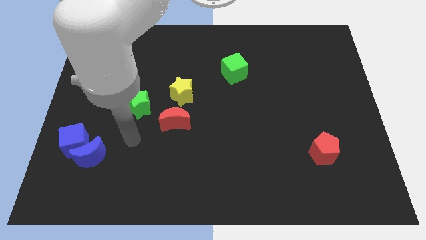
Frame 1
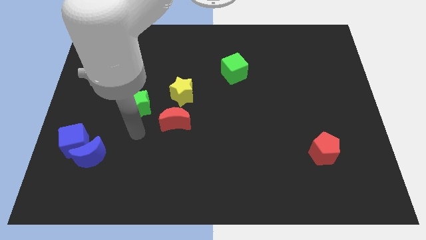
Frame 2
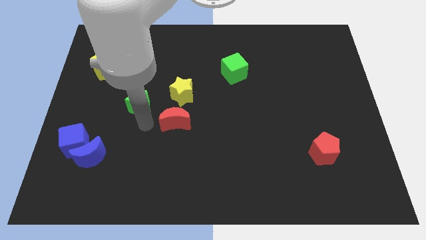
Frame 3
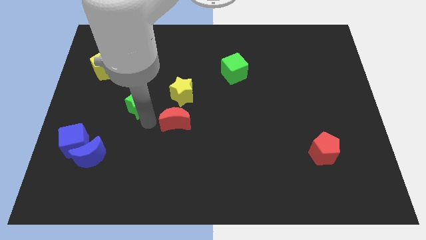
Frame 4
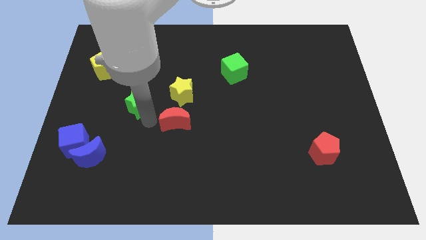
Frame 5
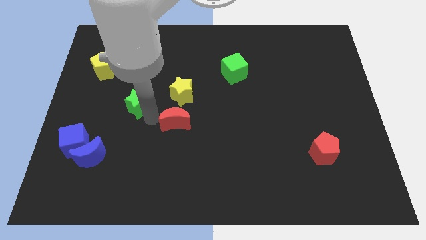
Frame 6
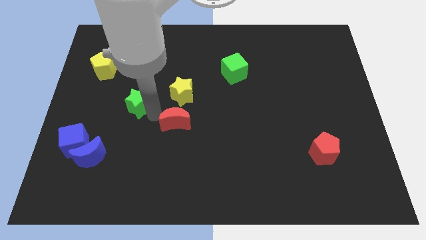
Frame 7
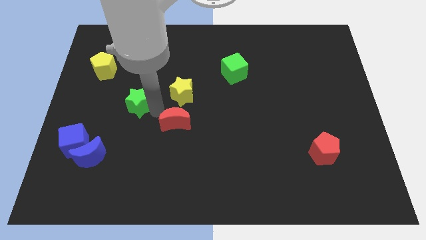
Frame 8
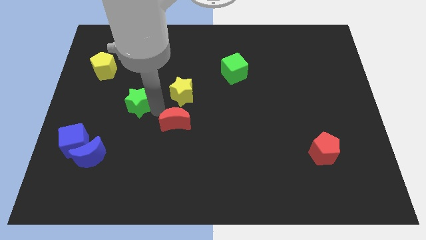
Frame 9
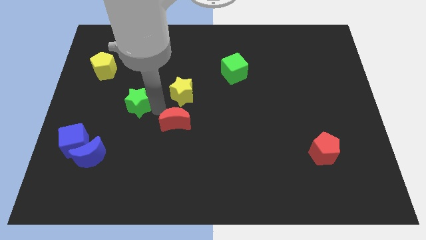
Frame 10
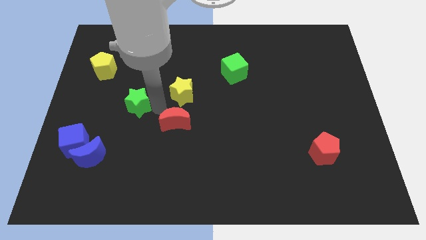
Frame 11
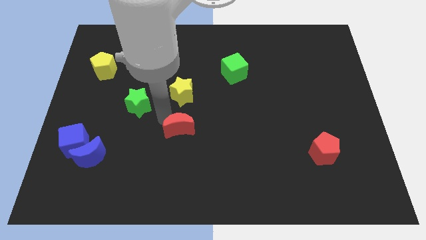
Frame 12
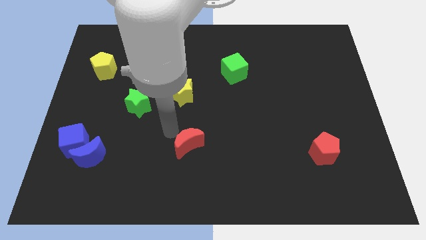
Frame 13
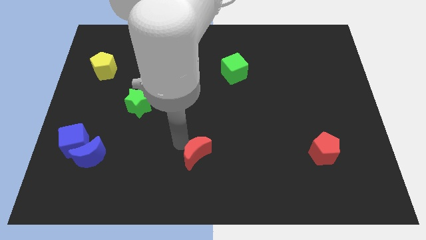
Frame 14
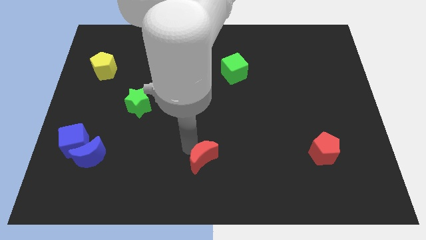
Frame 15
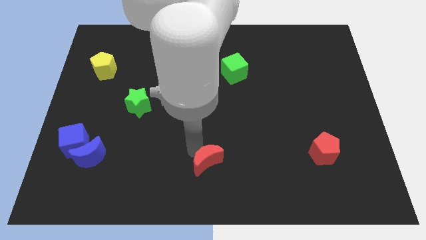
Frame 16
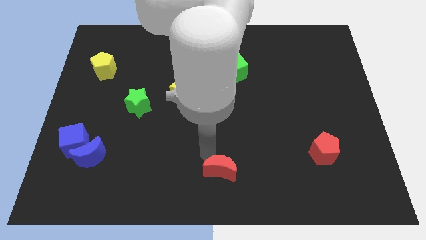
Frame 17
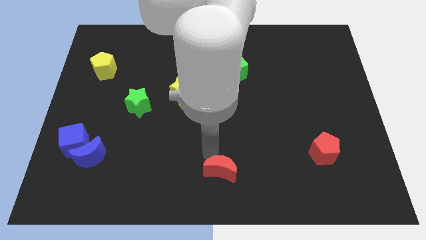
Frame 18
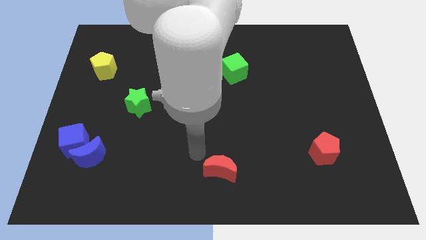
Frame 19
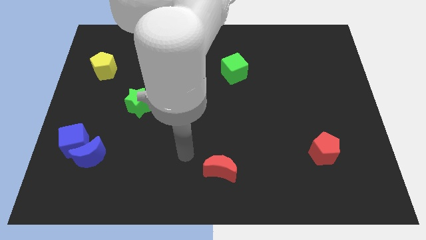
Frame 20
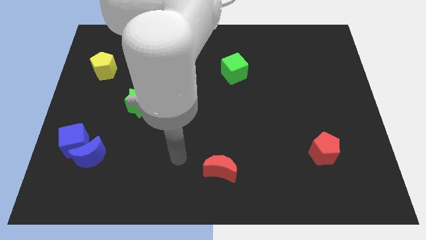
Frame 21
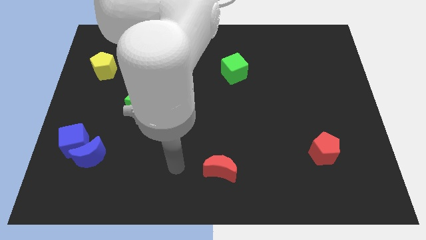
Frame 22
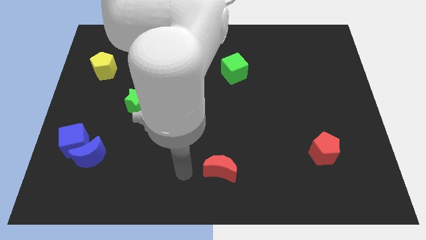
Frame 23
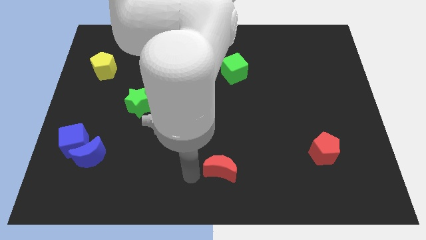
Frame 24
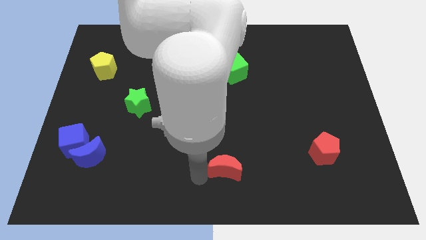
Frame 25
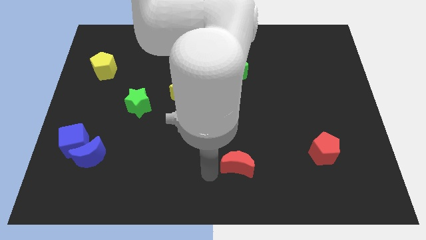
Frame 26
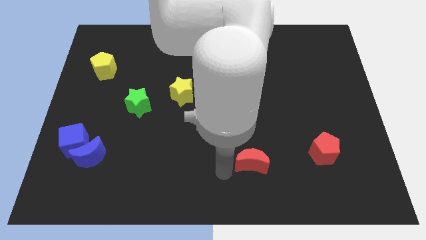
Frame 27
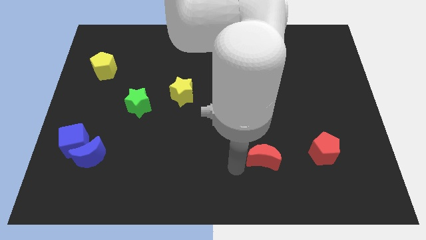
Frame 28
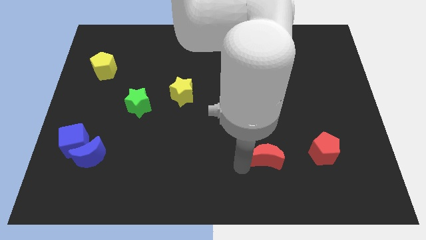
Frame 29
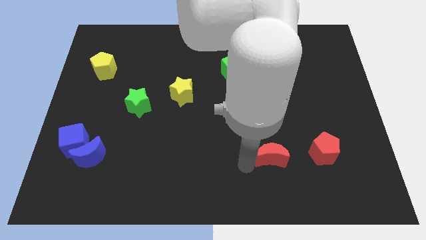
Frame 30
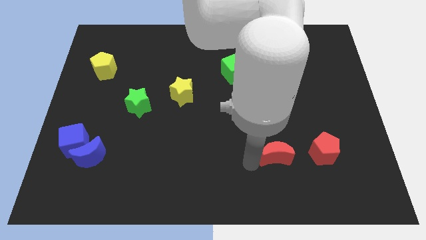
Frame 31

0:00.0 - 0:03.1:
place the red moon to the left of the red pentagon

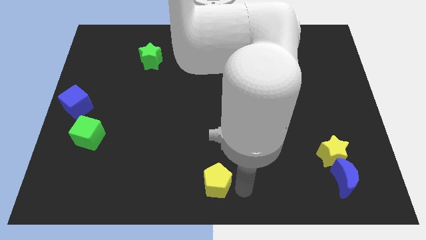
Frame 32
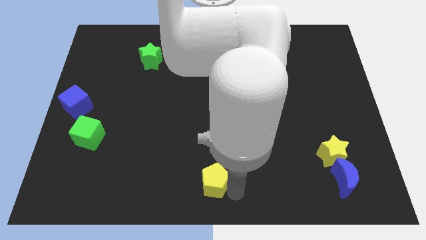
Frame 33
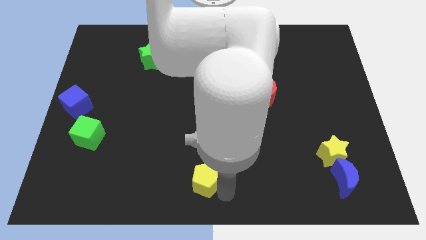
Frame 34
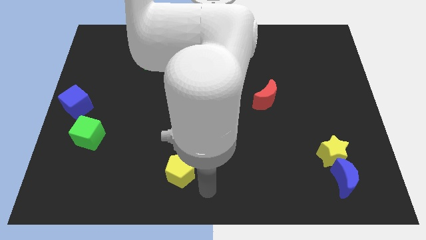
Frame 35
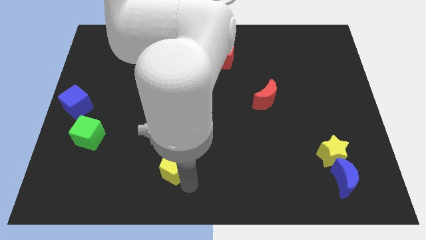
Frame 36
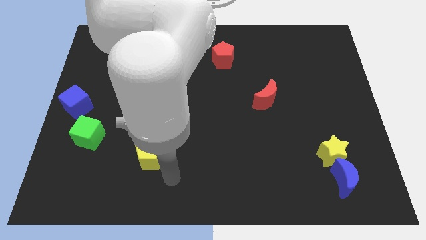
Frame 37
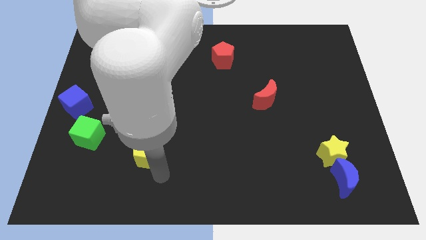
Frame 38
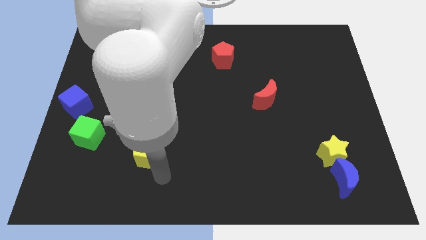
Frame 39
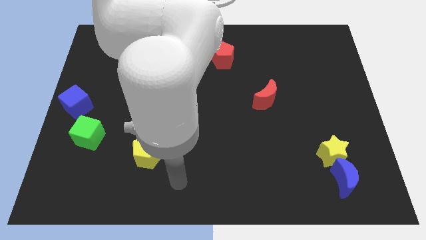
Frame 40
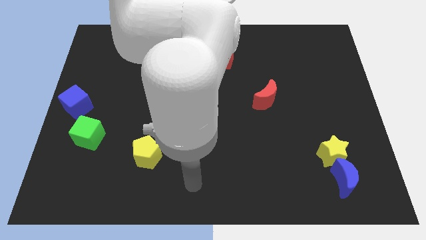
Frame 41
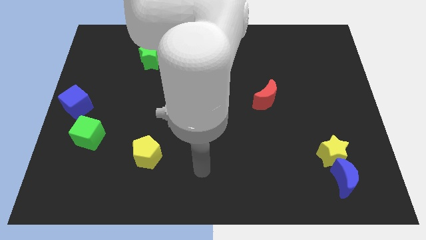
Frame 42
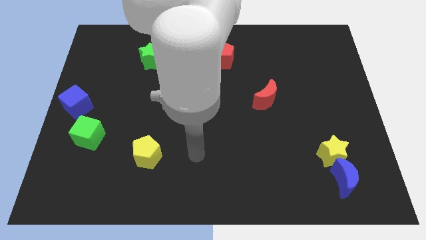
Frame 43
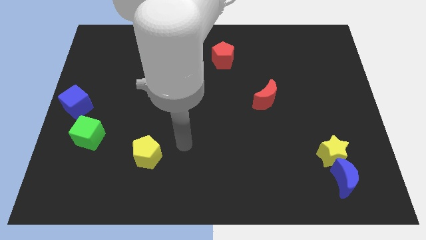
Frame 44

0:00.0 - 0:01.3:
push the yellow pentagon to the right of the green cube

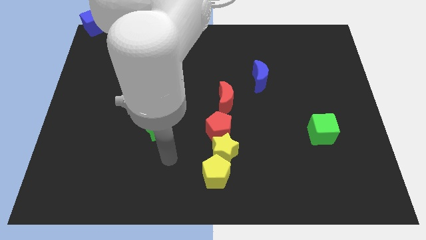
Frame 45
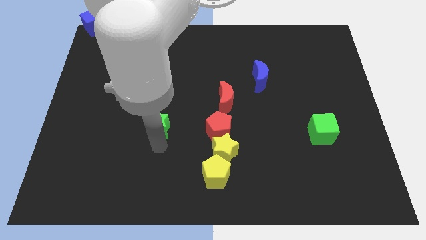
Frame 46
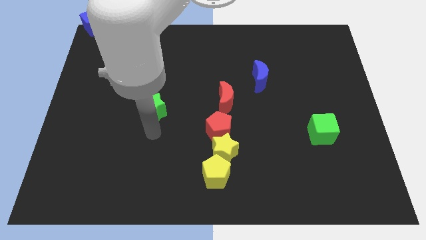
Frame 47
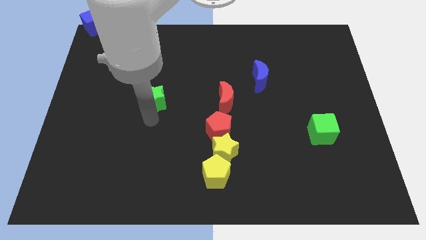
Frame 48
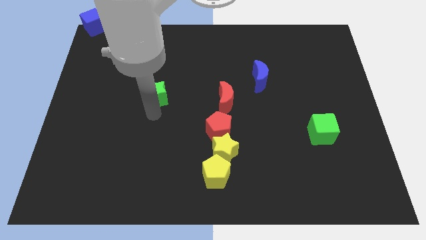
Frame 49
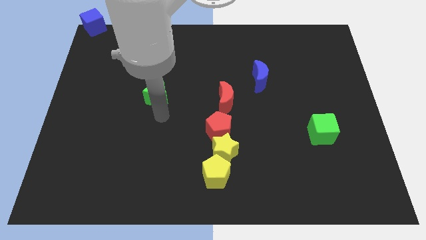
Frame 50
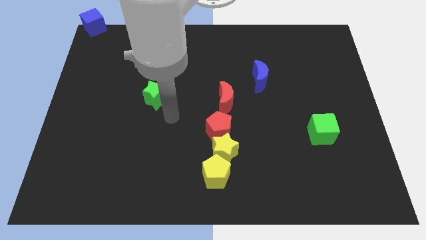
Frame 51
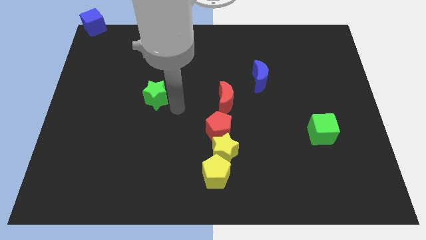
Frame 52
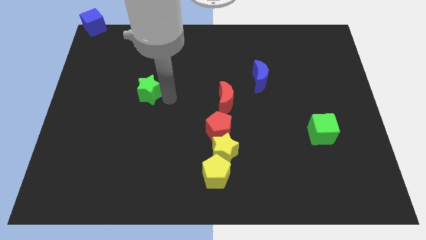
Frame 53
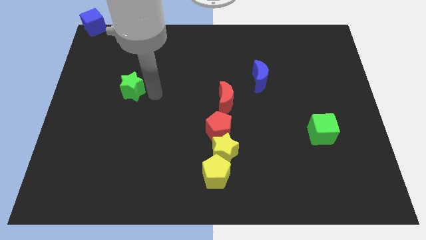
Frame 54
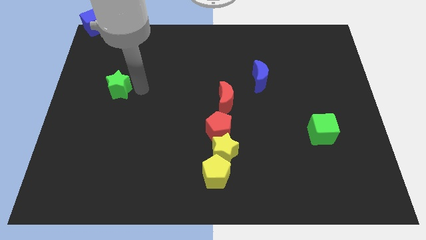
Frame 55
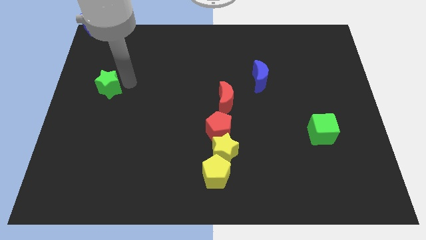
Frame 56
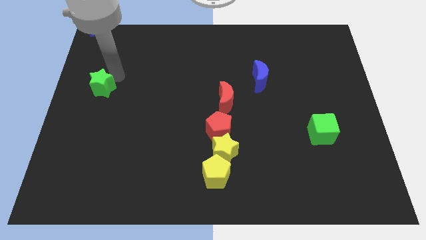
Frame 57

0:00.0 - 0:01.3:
slide green star diagonally upwards

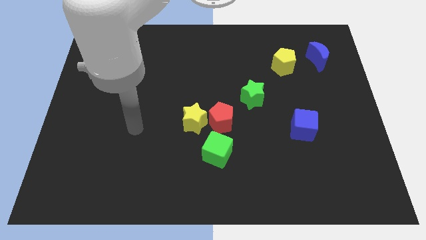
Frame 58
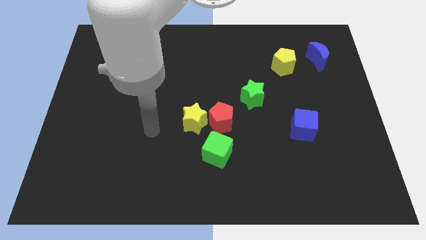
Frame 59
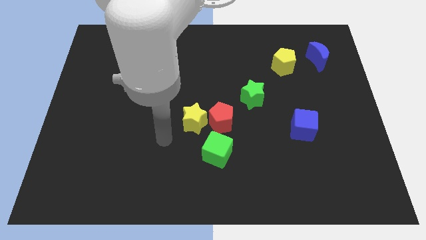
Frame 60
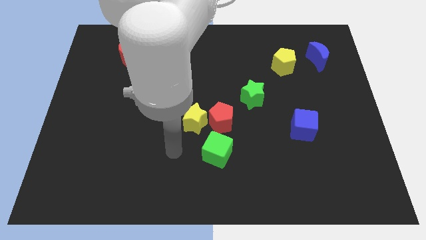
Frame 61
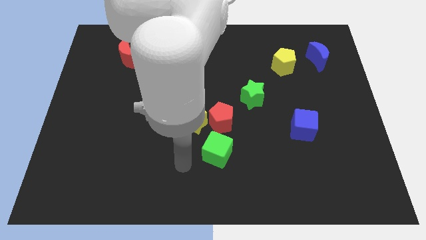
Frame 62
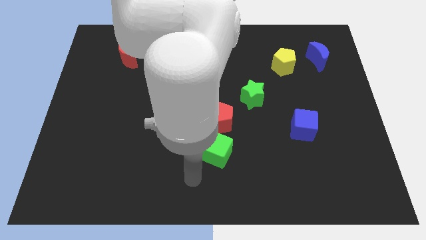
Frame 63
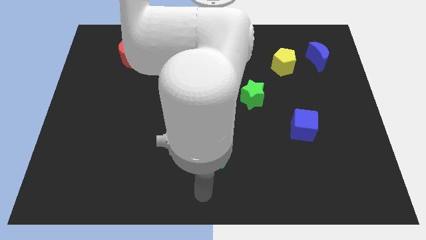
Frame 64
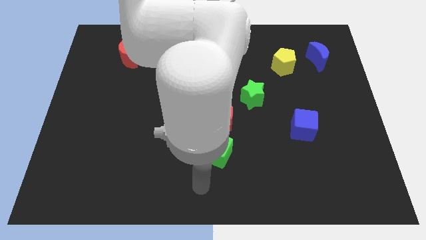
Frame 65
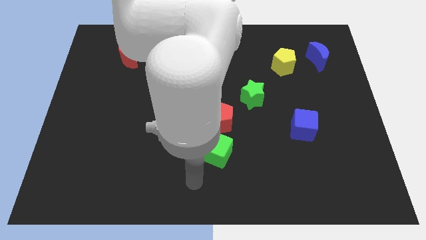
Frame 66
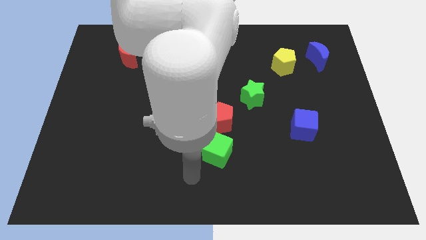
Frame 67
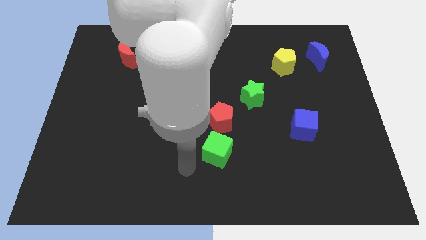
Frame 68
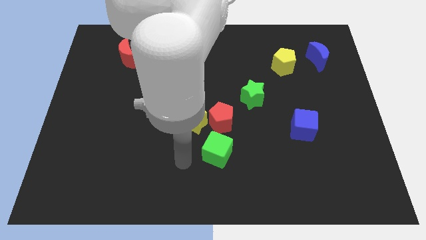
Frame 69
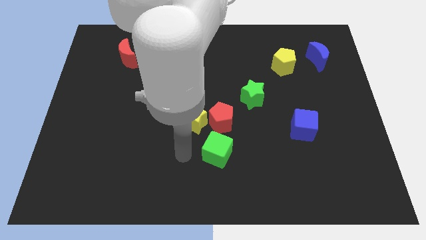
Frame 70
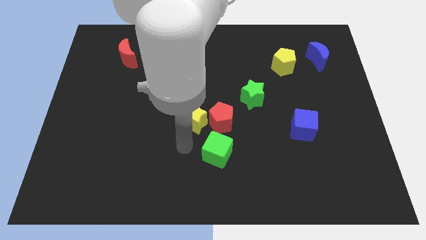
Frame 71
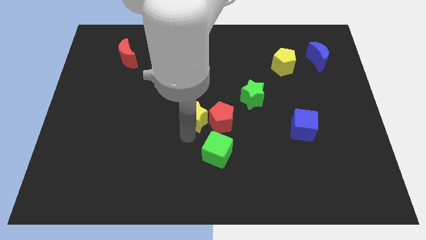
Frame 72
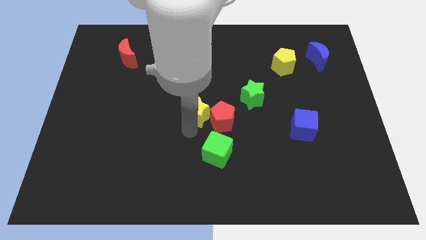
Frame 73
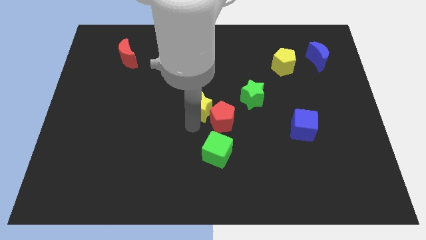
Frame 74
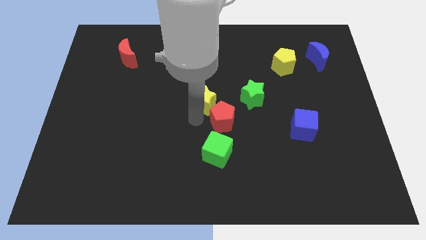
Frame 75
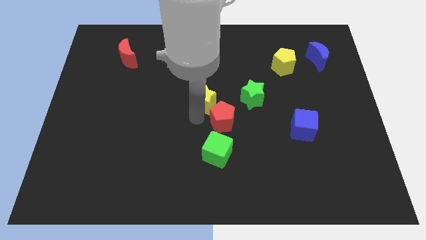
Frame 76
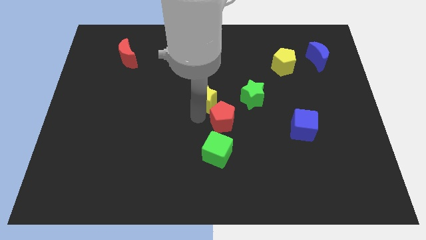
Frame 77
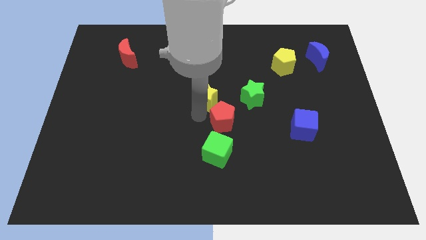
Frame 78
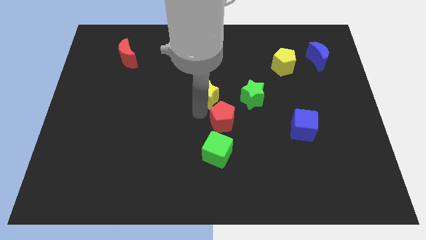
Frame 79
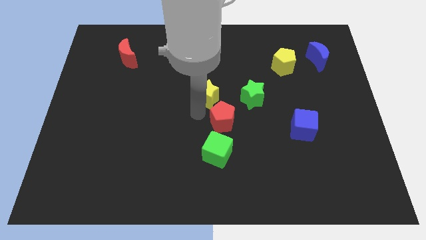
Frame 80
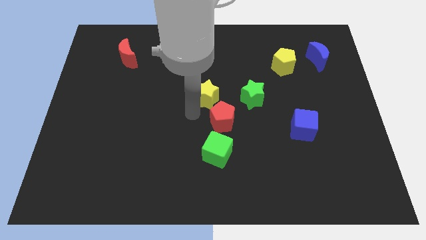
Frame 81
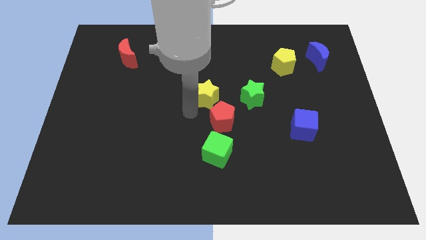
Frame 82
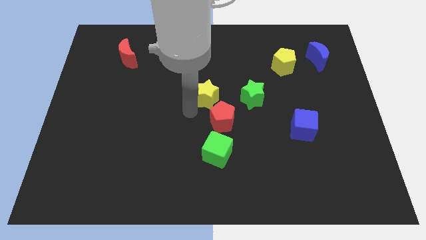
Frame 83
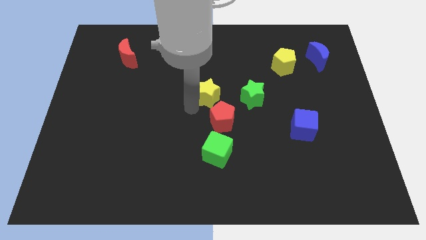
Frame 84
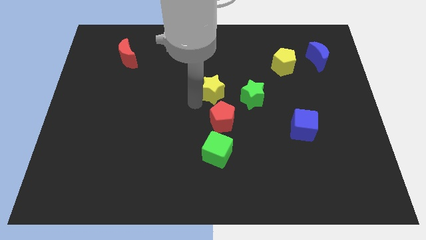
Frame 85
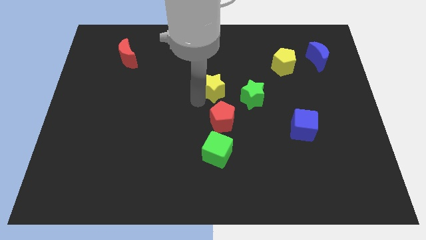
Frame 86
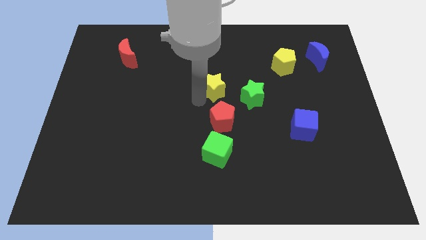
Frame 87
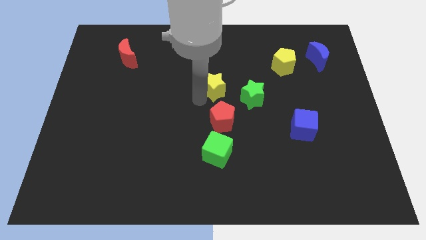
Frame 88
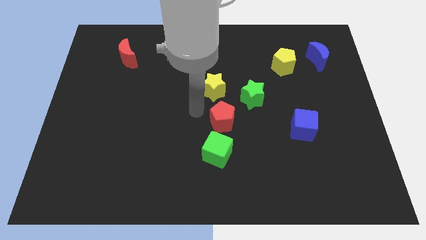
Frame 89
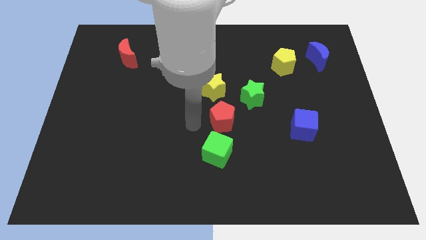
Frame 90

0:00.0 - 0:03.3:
place the yellow star left to the green star
